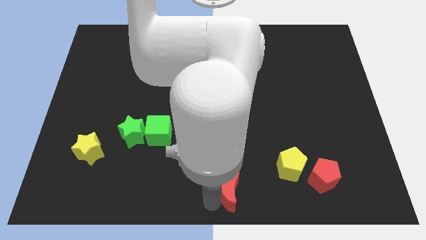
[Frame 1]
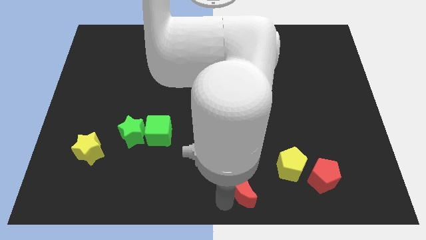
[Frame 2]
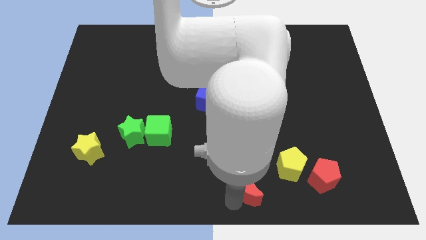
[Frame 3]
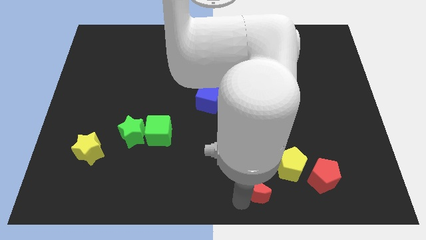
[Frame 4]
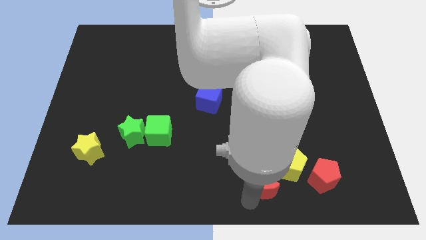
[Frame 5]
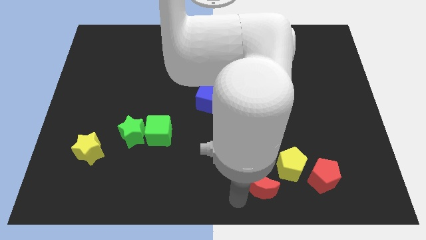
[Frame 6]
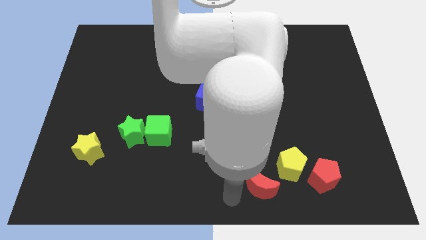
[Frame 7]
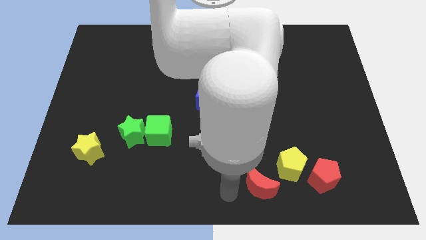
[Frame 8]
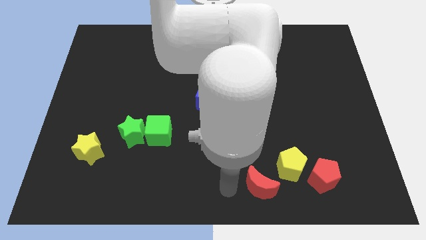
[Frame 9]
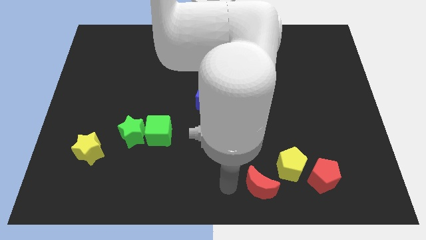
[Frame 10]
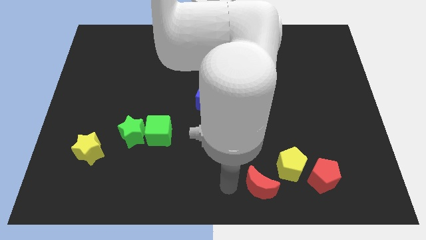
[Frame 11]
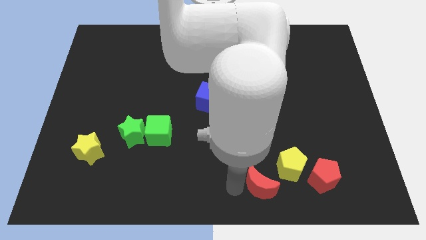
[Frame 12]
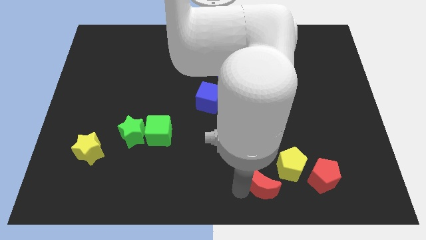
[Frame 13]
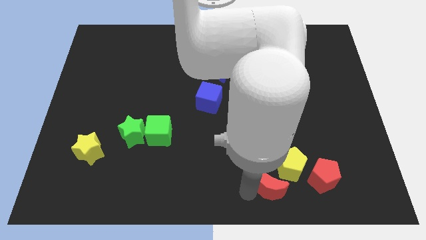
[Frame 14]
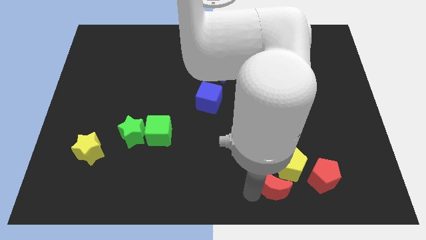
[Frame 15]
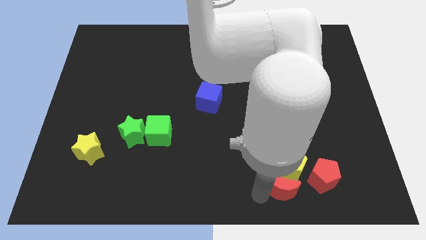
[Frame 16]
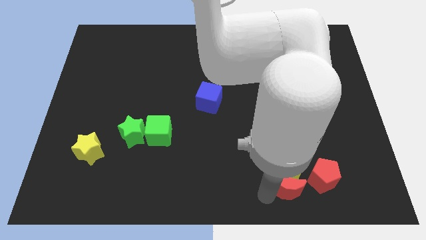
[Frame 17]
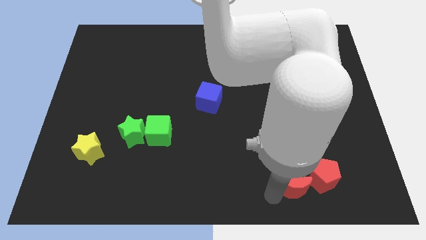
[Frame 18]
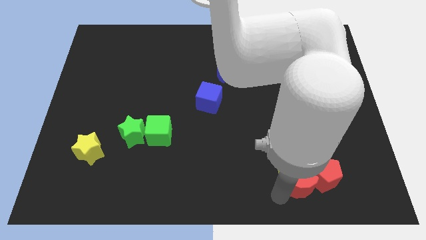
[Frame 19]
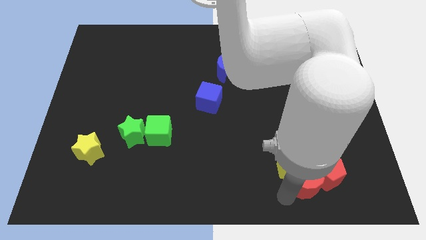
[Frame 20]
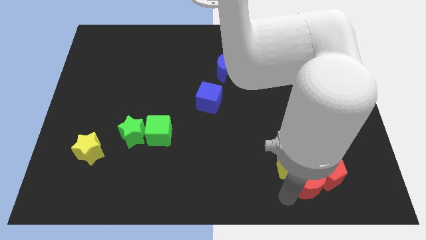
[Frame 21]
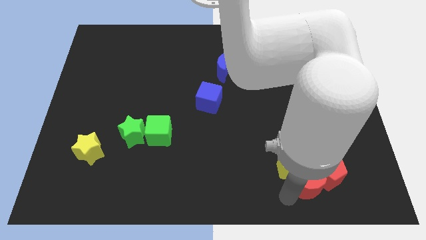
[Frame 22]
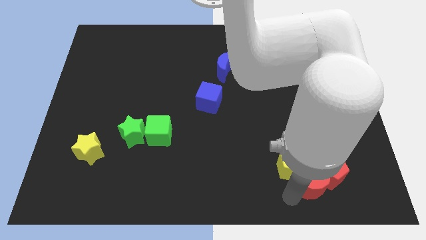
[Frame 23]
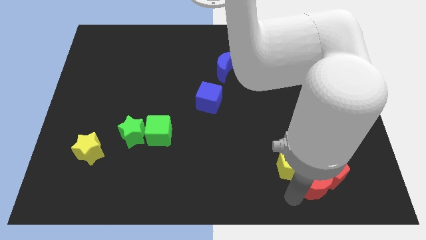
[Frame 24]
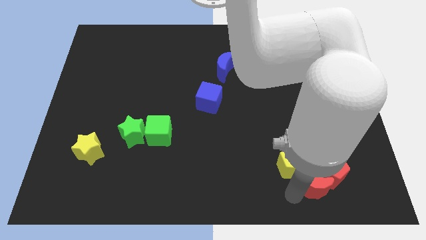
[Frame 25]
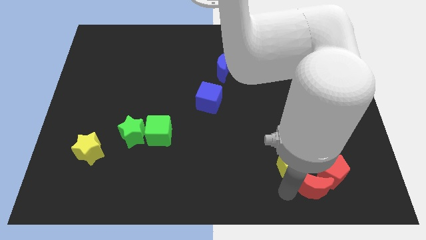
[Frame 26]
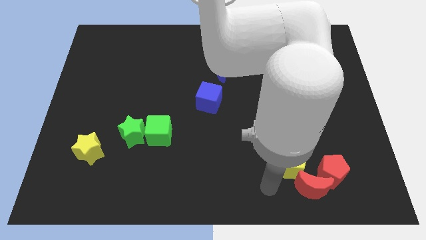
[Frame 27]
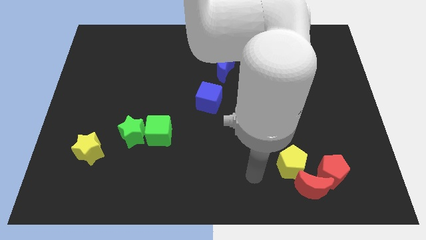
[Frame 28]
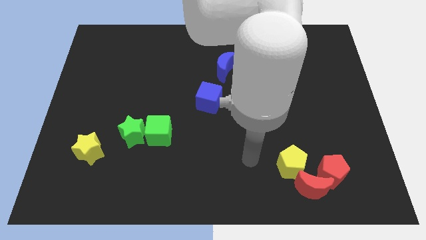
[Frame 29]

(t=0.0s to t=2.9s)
place the red moon into the red pentagon

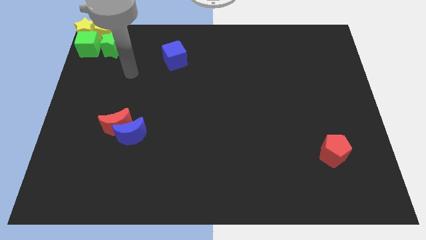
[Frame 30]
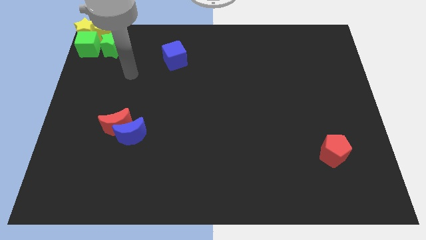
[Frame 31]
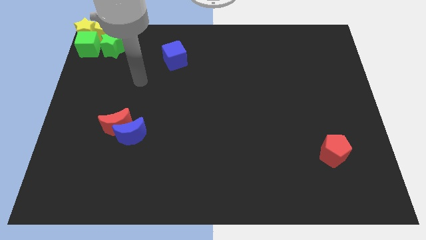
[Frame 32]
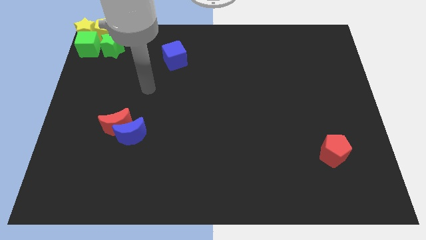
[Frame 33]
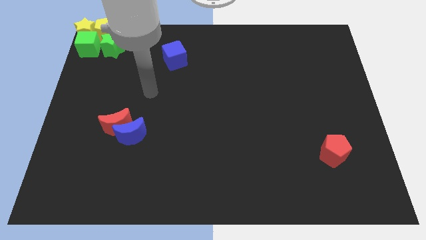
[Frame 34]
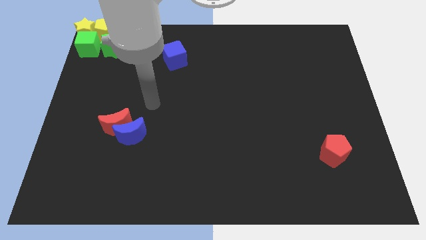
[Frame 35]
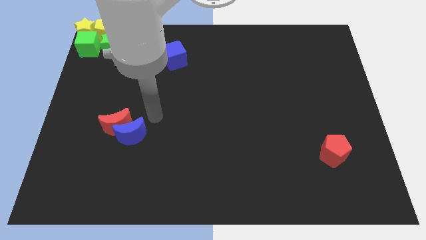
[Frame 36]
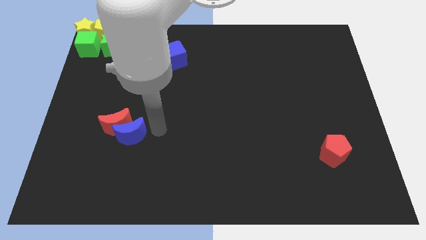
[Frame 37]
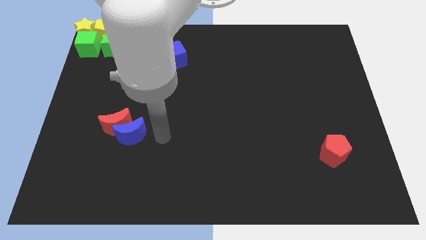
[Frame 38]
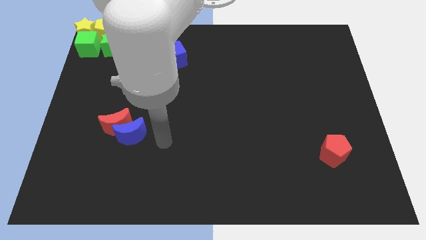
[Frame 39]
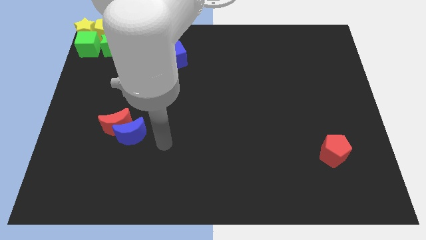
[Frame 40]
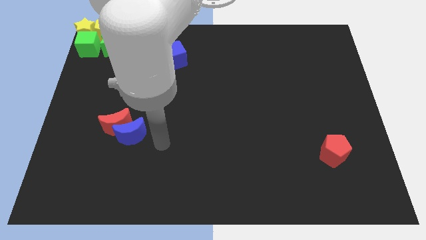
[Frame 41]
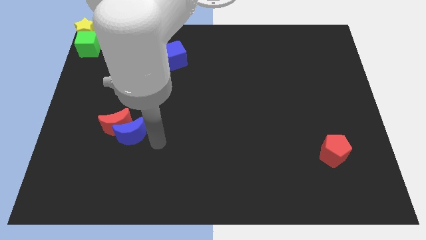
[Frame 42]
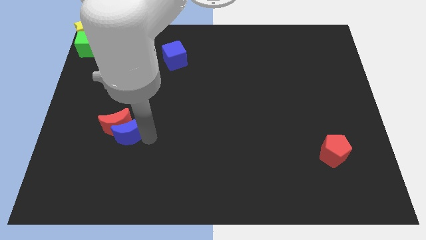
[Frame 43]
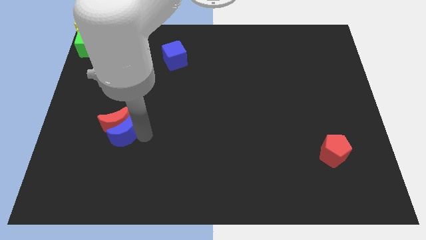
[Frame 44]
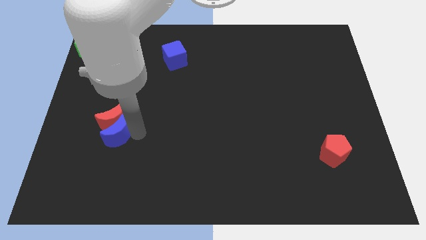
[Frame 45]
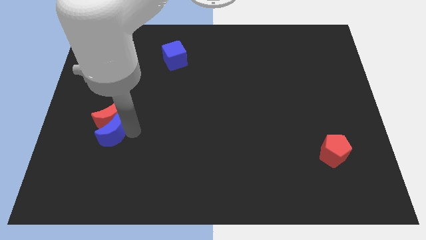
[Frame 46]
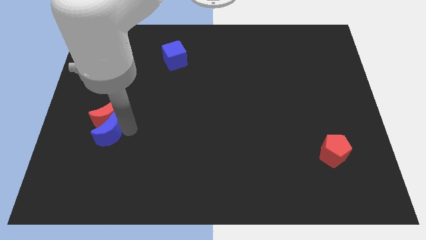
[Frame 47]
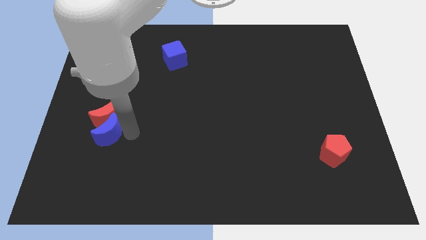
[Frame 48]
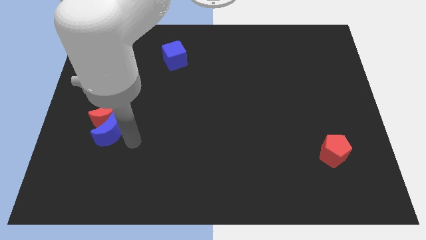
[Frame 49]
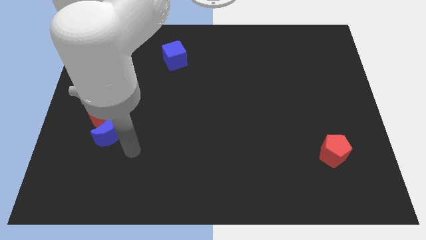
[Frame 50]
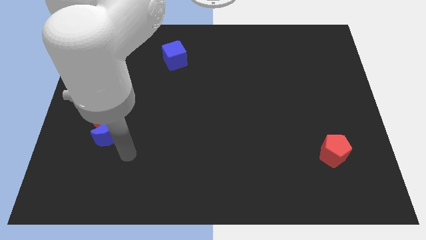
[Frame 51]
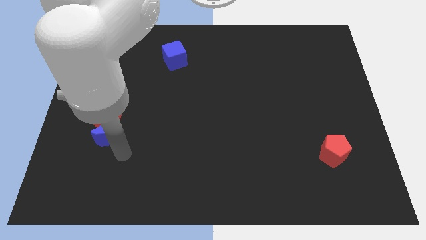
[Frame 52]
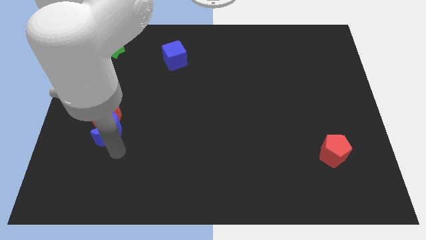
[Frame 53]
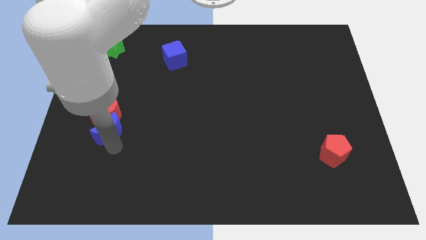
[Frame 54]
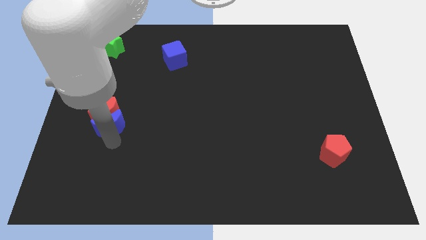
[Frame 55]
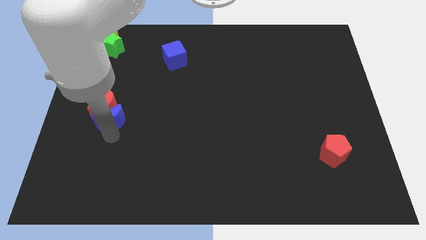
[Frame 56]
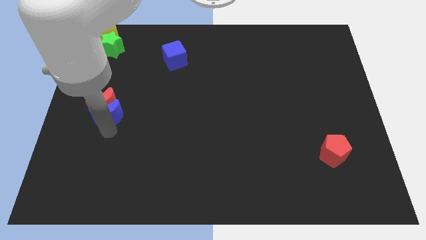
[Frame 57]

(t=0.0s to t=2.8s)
push the blue moon towards upward

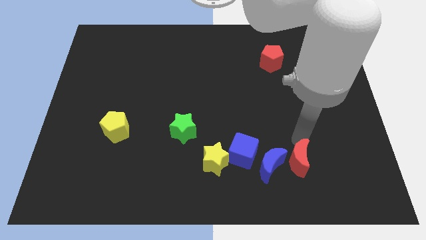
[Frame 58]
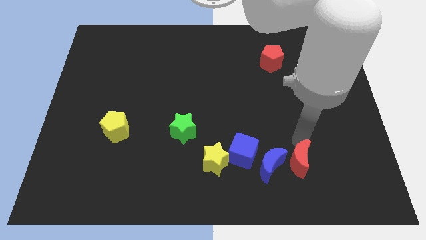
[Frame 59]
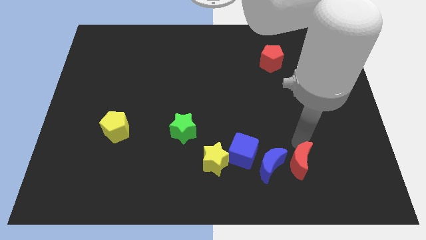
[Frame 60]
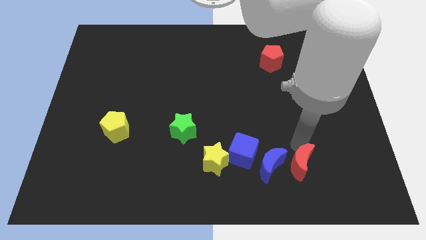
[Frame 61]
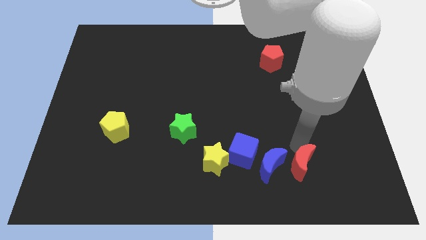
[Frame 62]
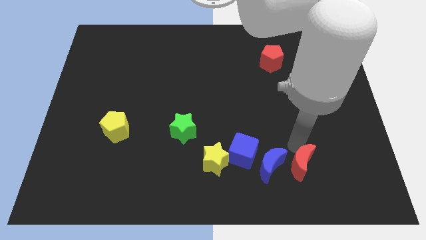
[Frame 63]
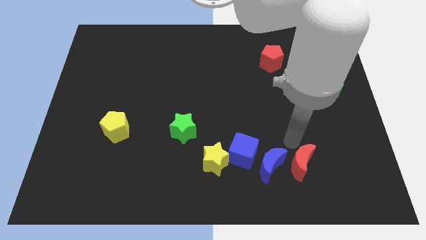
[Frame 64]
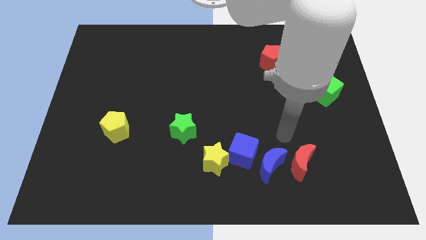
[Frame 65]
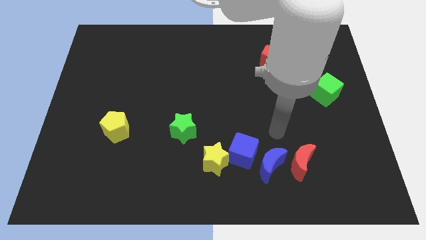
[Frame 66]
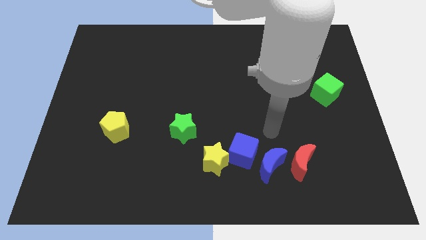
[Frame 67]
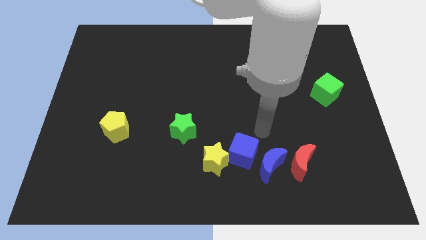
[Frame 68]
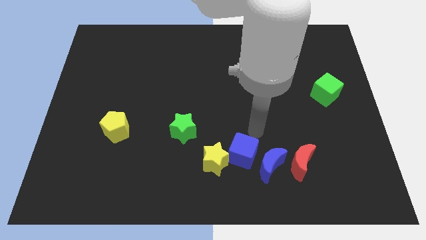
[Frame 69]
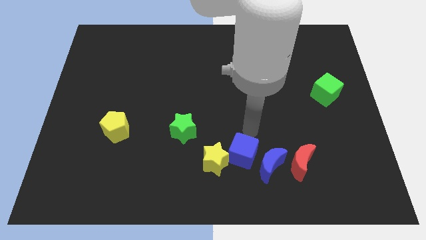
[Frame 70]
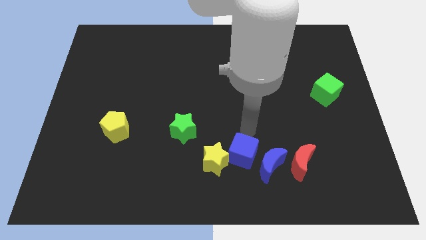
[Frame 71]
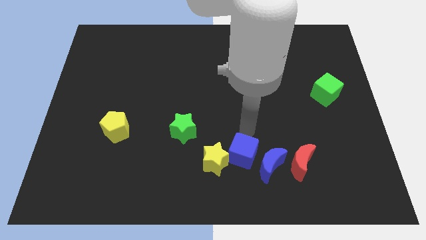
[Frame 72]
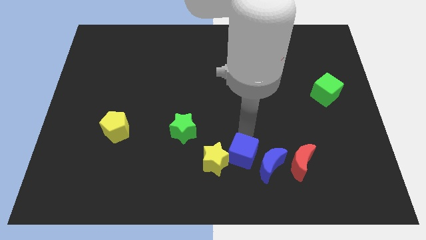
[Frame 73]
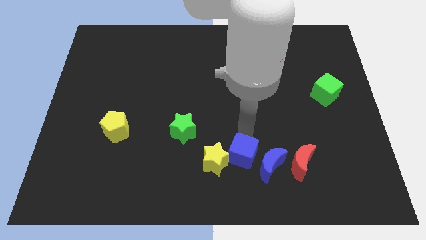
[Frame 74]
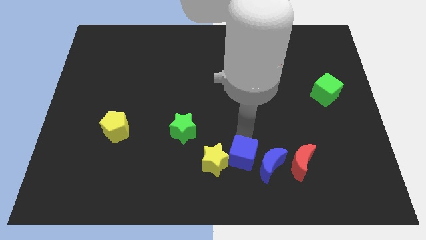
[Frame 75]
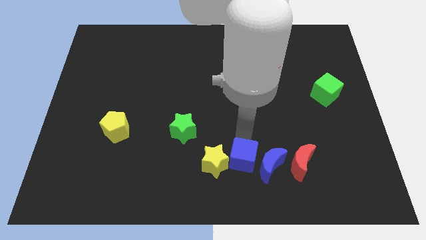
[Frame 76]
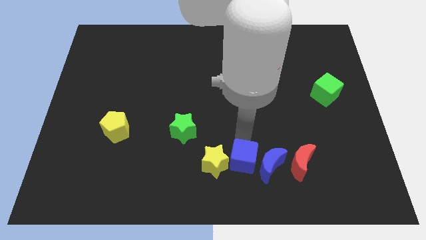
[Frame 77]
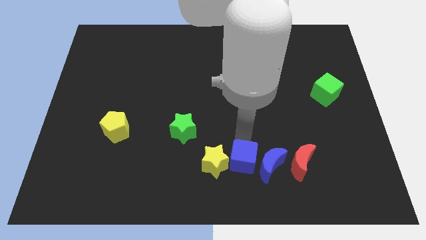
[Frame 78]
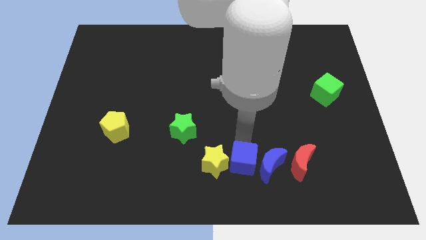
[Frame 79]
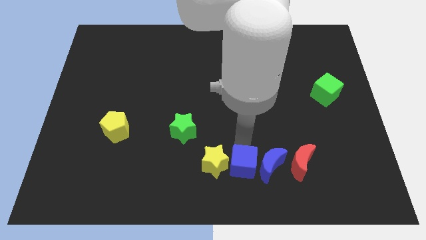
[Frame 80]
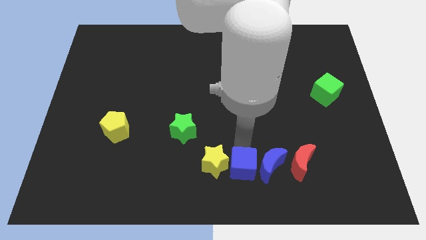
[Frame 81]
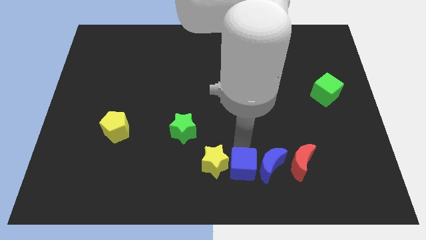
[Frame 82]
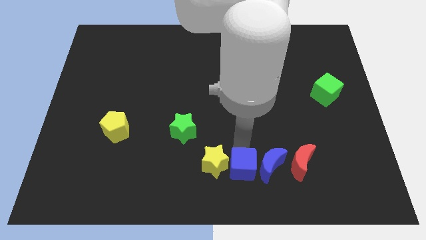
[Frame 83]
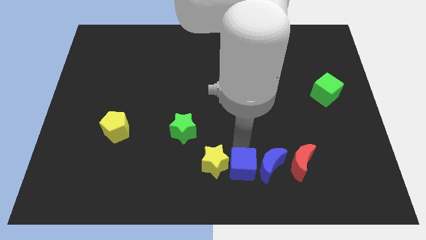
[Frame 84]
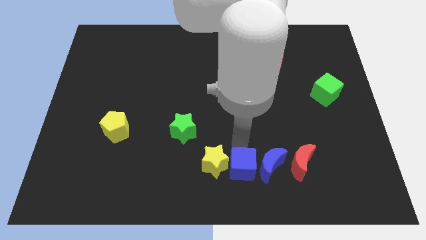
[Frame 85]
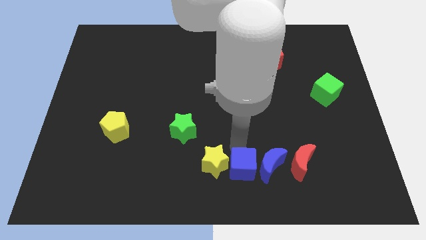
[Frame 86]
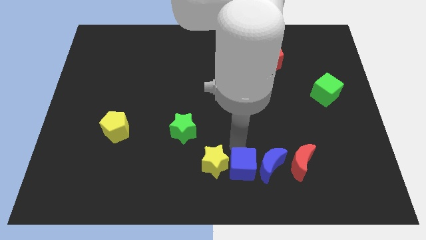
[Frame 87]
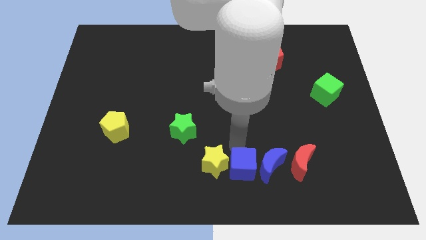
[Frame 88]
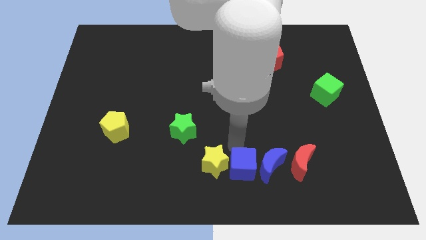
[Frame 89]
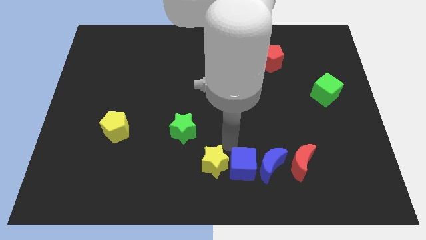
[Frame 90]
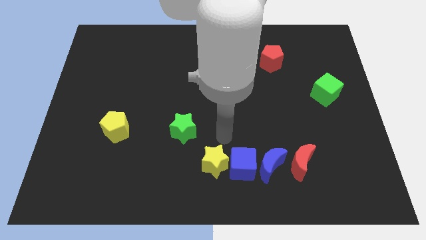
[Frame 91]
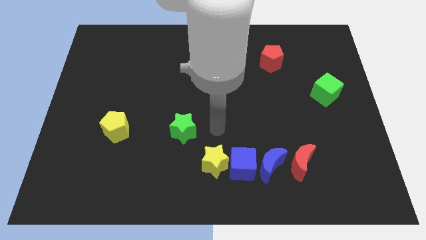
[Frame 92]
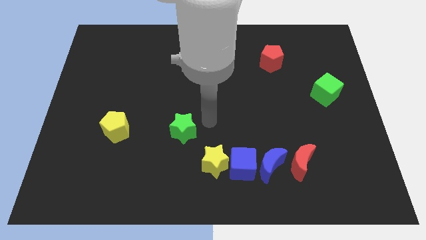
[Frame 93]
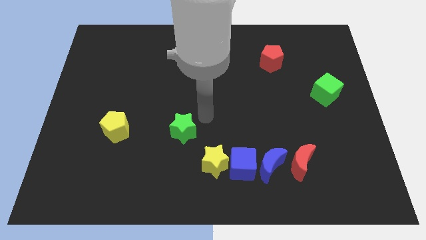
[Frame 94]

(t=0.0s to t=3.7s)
place blue cube to the right of the yellow star
